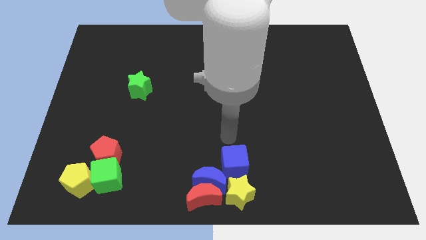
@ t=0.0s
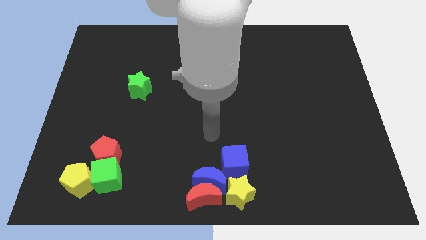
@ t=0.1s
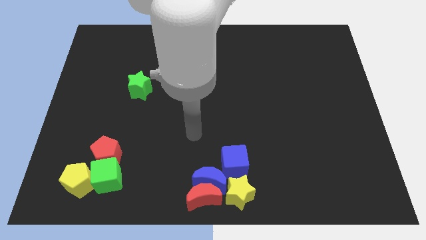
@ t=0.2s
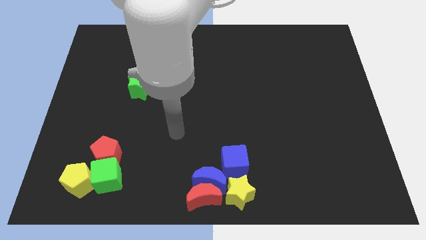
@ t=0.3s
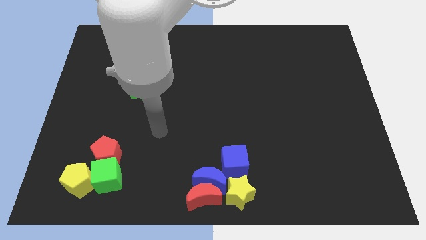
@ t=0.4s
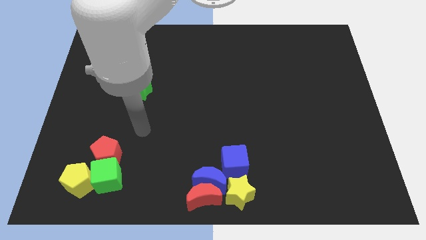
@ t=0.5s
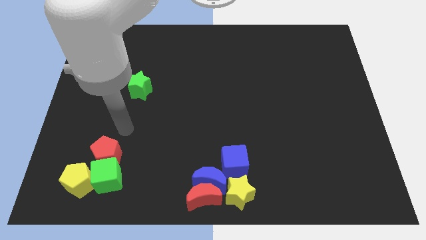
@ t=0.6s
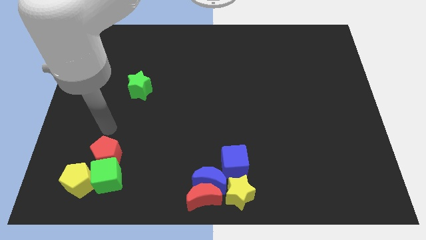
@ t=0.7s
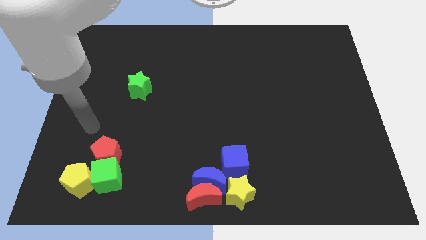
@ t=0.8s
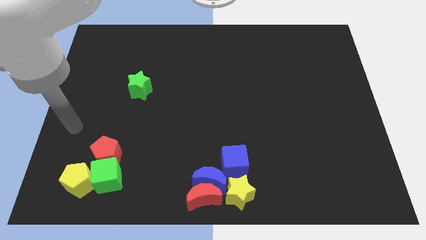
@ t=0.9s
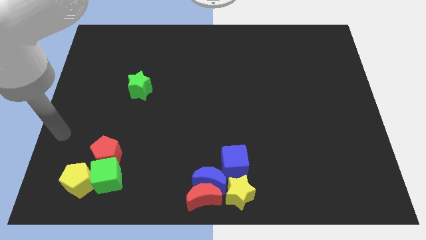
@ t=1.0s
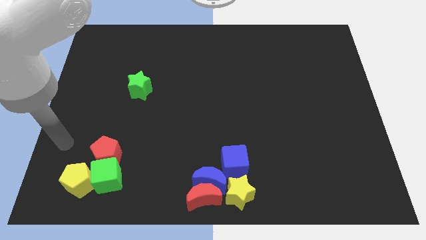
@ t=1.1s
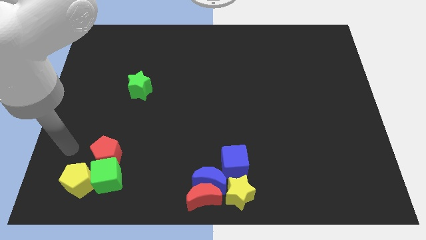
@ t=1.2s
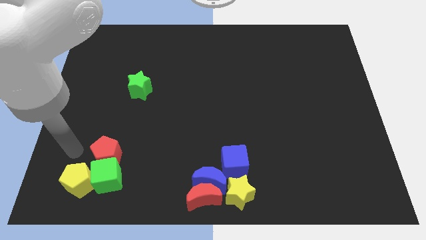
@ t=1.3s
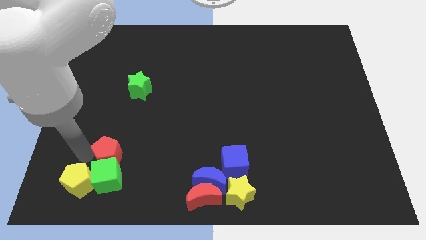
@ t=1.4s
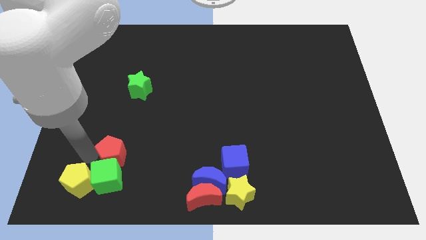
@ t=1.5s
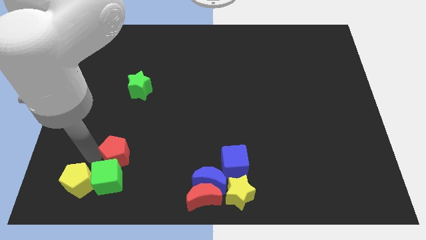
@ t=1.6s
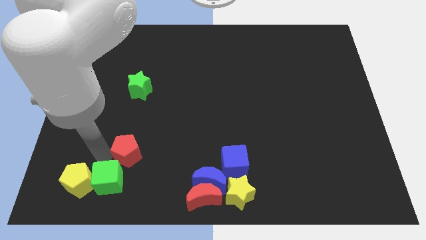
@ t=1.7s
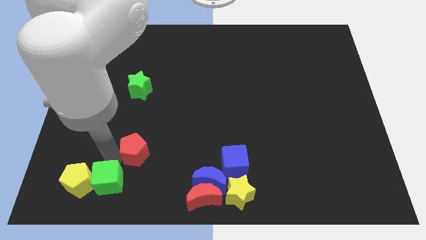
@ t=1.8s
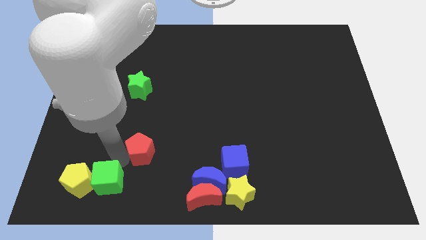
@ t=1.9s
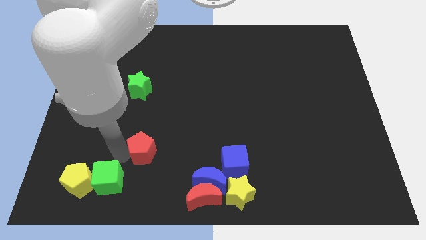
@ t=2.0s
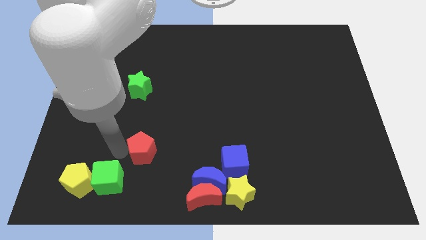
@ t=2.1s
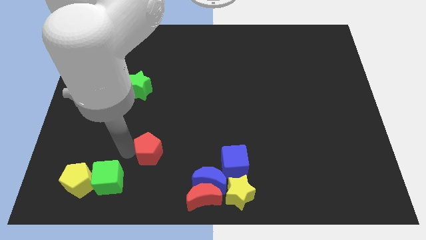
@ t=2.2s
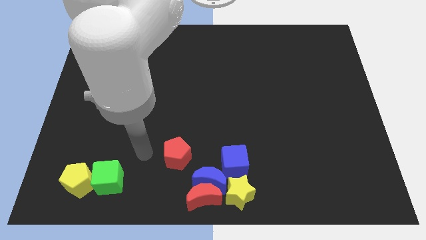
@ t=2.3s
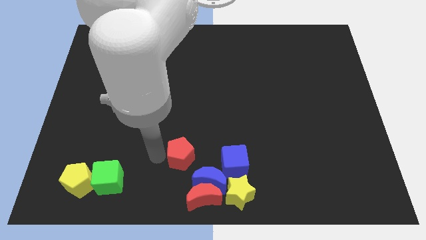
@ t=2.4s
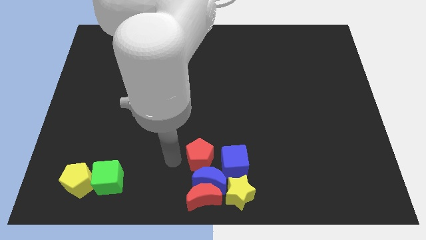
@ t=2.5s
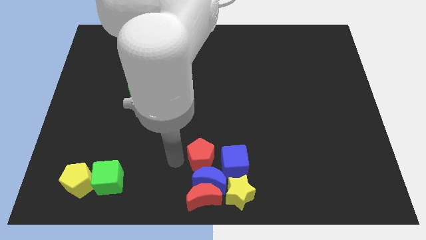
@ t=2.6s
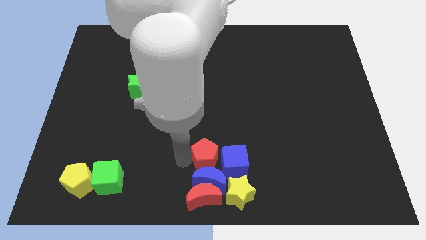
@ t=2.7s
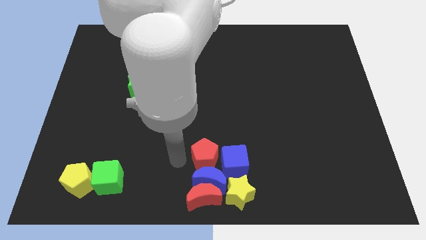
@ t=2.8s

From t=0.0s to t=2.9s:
place the red pentagon left to the blue cube

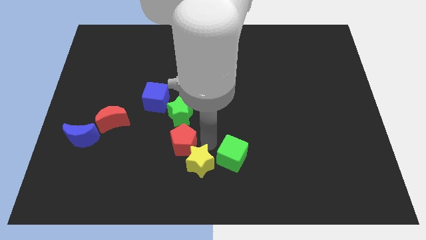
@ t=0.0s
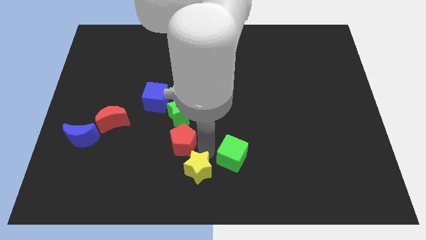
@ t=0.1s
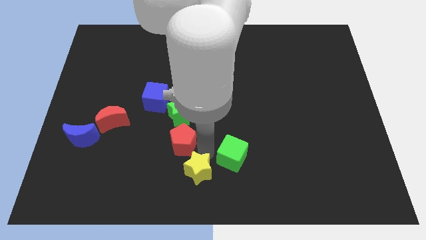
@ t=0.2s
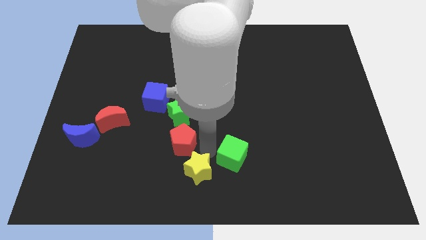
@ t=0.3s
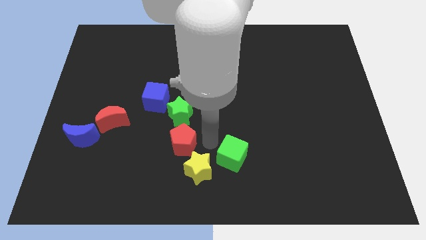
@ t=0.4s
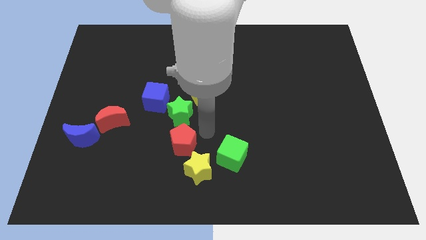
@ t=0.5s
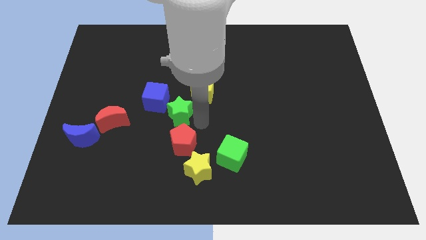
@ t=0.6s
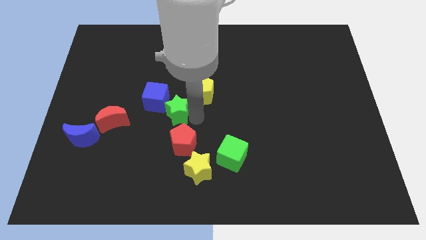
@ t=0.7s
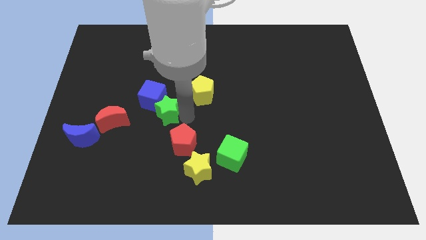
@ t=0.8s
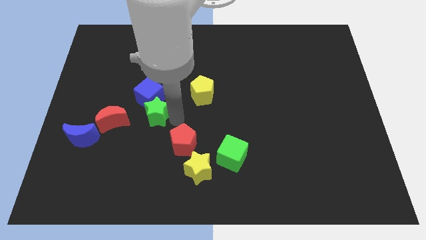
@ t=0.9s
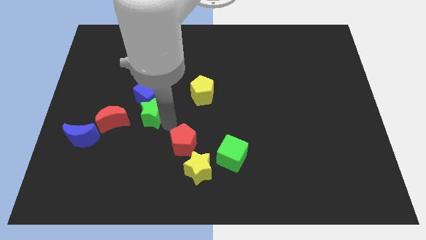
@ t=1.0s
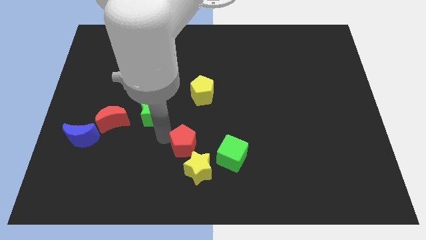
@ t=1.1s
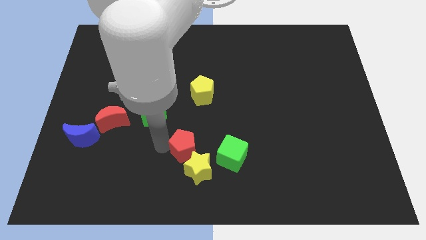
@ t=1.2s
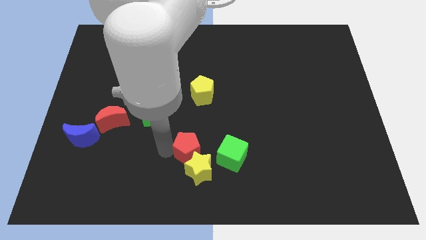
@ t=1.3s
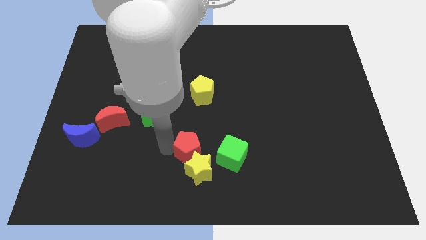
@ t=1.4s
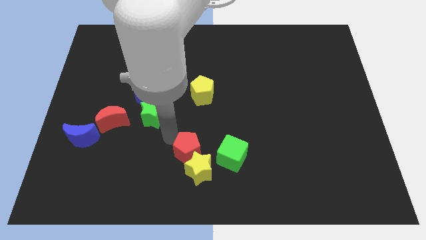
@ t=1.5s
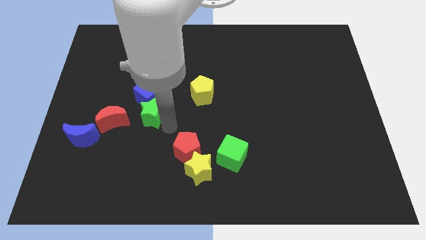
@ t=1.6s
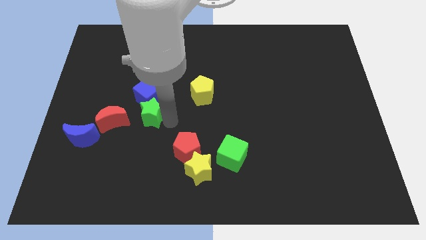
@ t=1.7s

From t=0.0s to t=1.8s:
slightly move the red pentagon towards yellow star

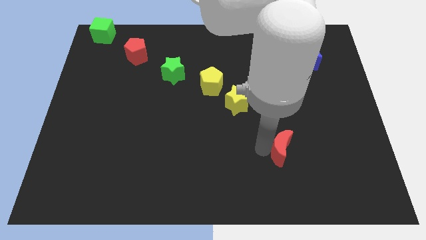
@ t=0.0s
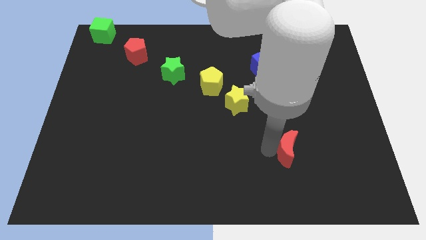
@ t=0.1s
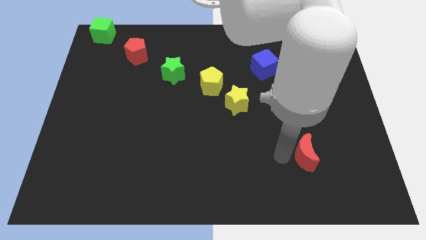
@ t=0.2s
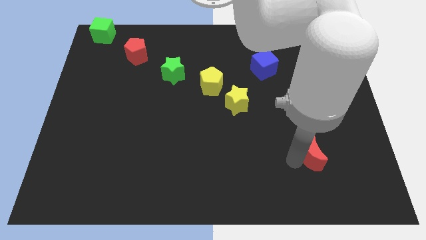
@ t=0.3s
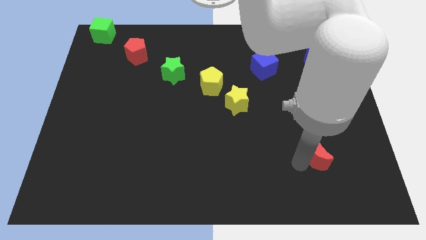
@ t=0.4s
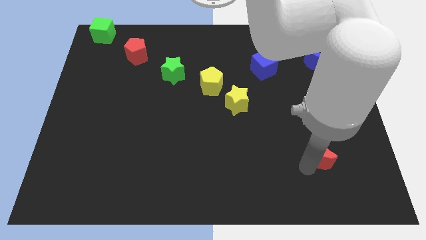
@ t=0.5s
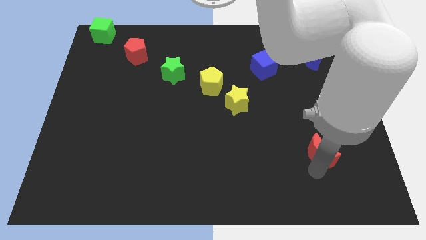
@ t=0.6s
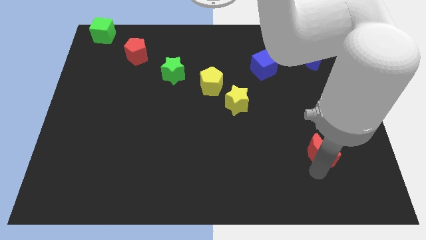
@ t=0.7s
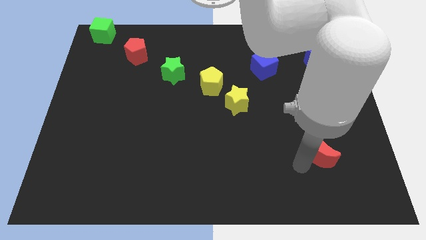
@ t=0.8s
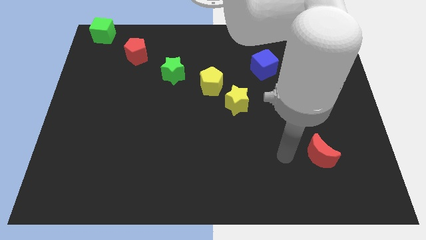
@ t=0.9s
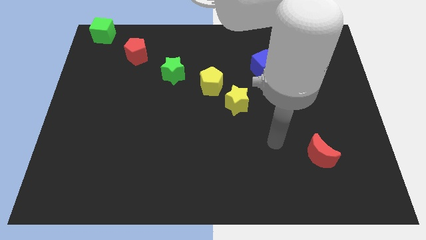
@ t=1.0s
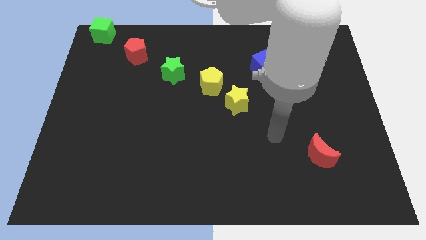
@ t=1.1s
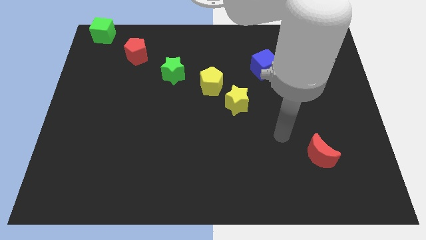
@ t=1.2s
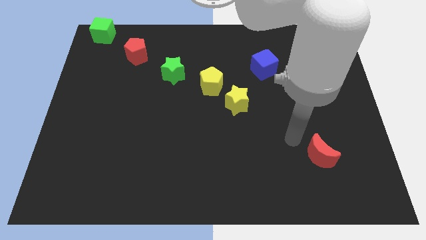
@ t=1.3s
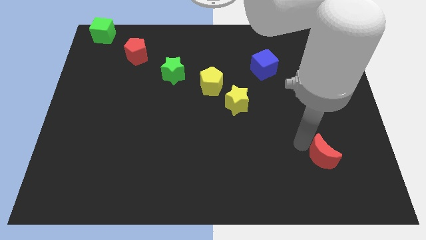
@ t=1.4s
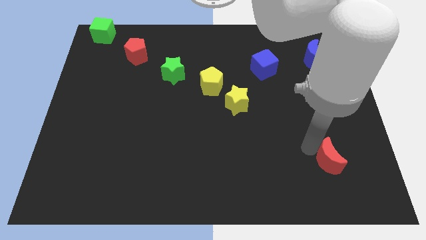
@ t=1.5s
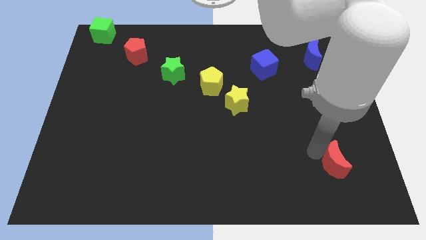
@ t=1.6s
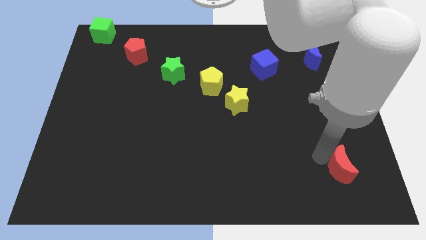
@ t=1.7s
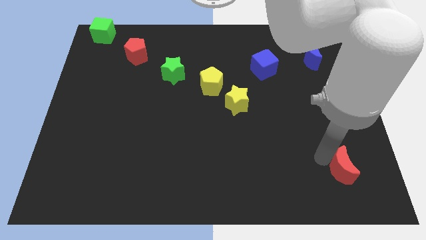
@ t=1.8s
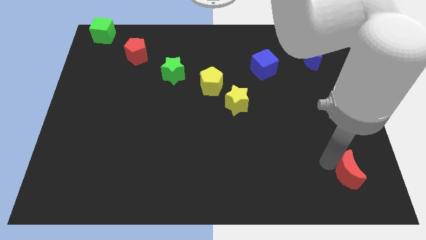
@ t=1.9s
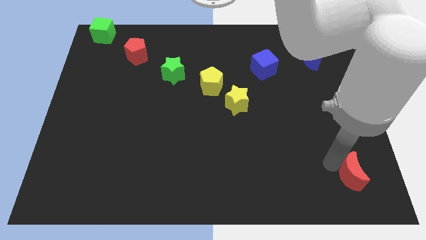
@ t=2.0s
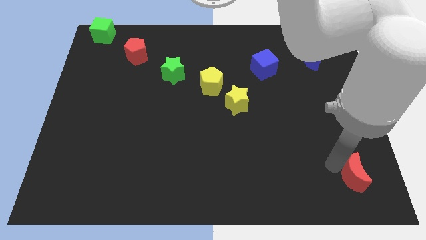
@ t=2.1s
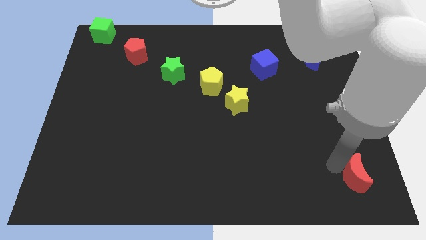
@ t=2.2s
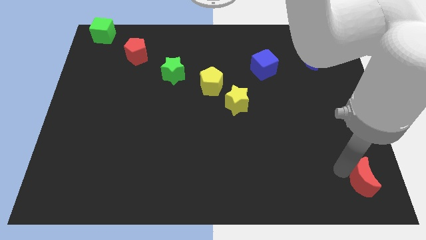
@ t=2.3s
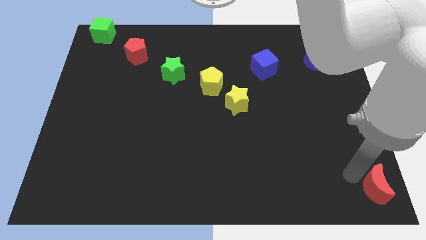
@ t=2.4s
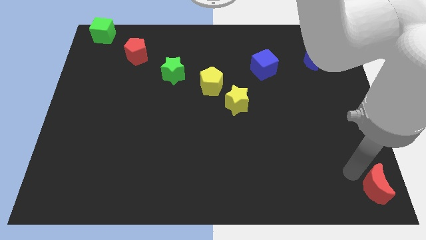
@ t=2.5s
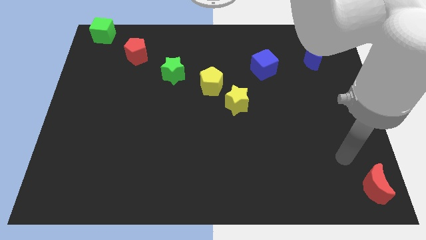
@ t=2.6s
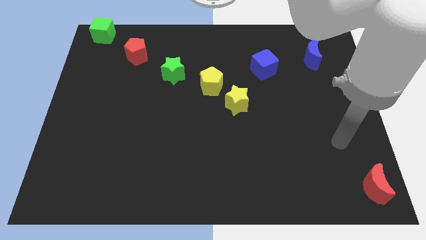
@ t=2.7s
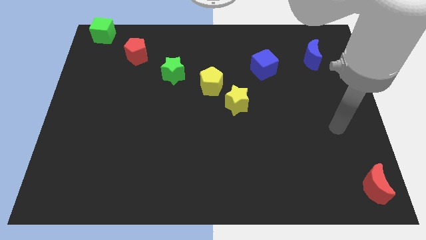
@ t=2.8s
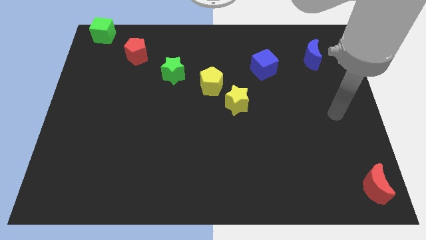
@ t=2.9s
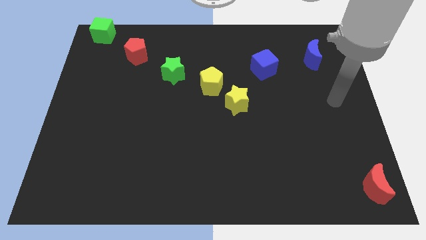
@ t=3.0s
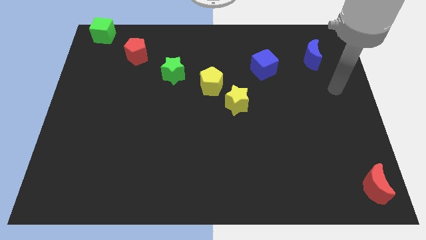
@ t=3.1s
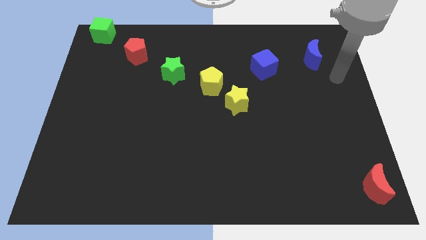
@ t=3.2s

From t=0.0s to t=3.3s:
place red moon at bottom right corner

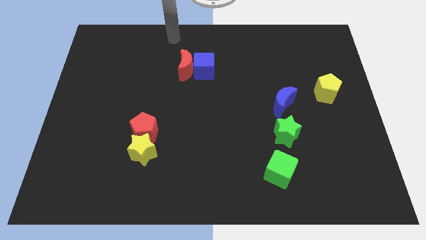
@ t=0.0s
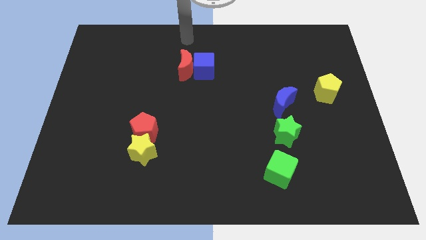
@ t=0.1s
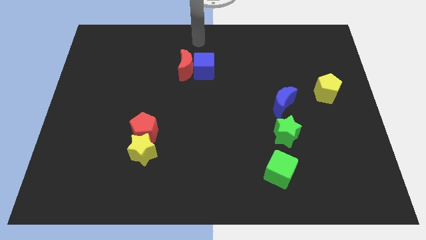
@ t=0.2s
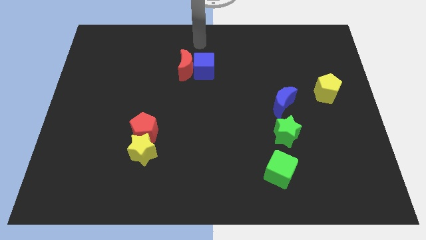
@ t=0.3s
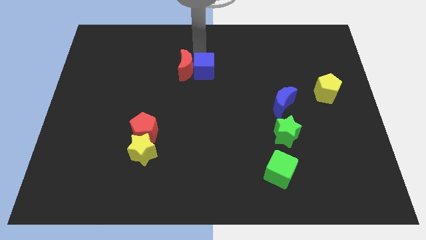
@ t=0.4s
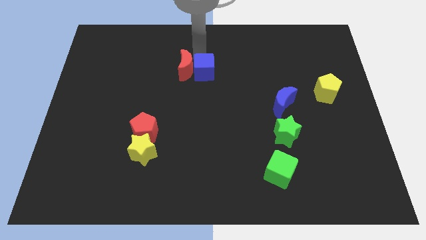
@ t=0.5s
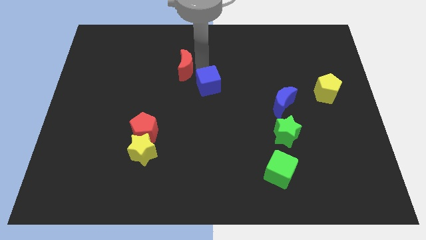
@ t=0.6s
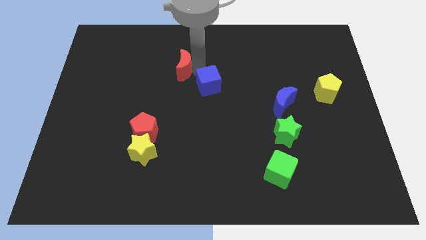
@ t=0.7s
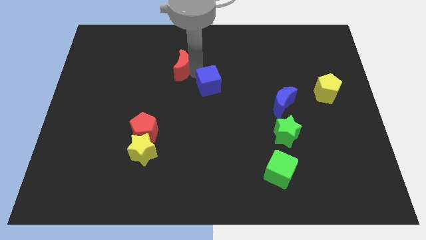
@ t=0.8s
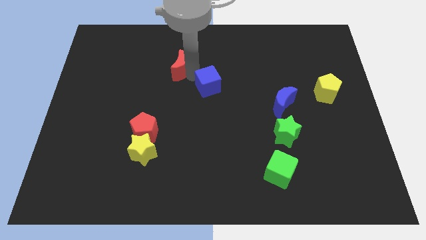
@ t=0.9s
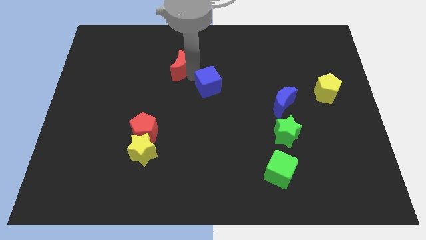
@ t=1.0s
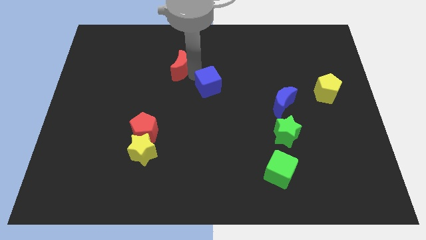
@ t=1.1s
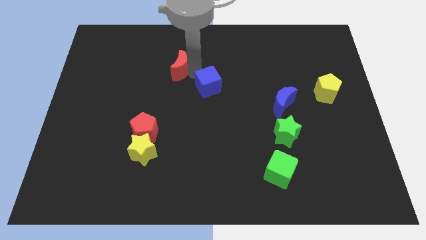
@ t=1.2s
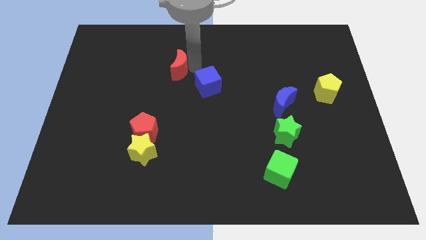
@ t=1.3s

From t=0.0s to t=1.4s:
separate the red crescent and the blue cube
